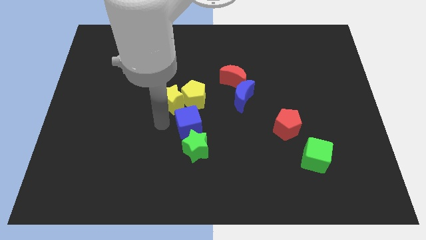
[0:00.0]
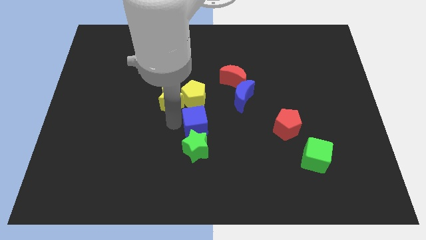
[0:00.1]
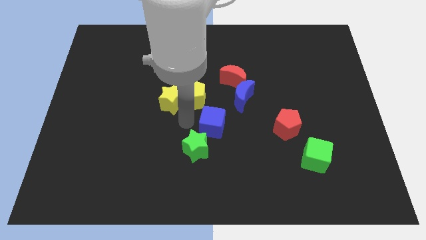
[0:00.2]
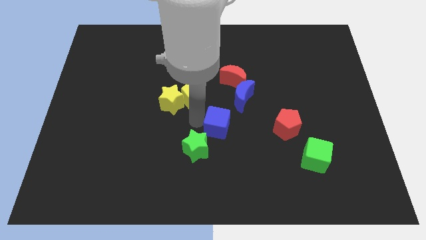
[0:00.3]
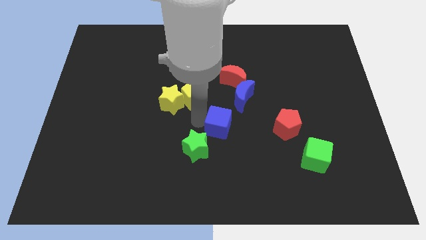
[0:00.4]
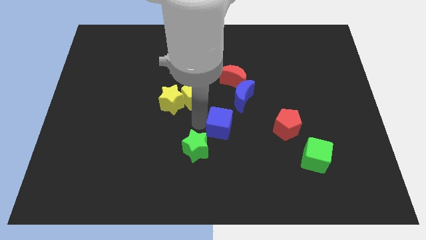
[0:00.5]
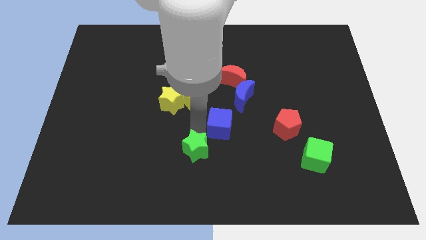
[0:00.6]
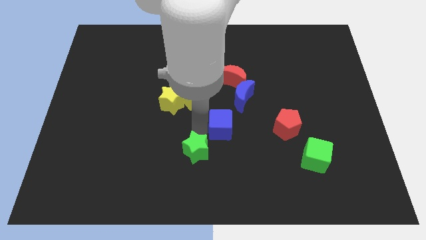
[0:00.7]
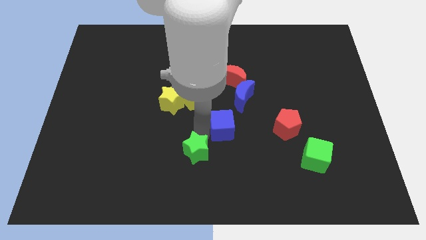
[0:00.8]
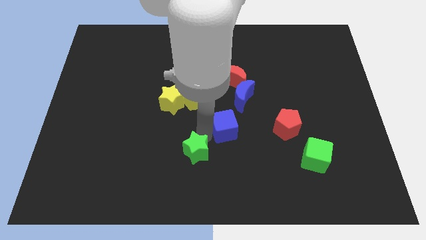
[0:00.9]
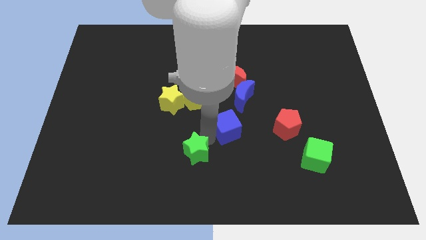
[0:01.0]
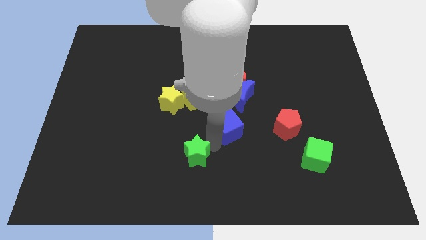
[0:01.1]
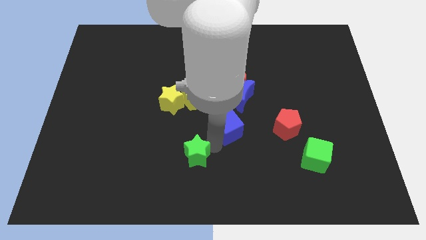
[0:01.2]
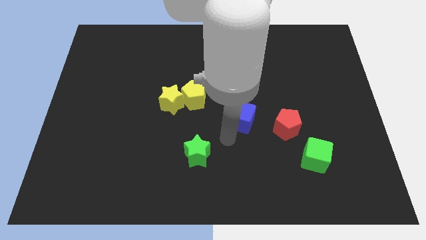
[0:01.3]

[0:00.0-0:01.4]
separate the blue cube from the green star

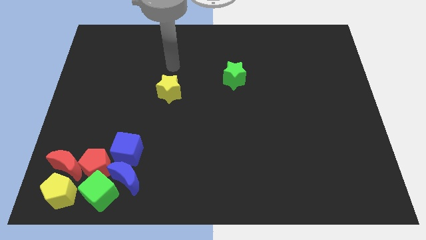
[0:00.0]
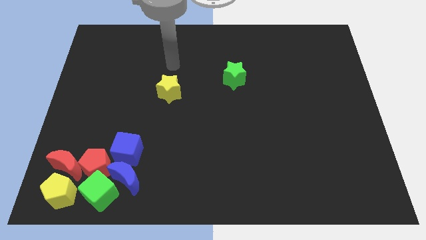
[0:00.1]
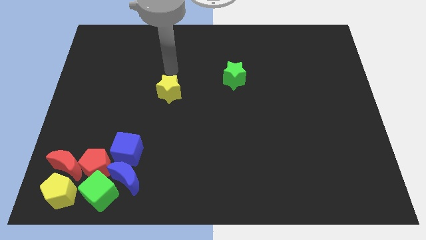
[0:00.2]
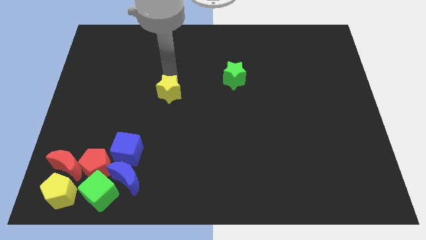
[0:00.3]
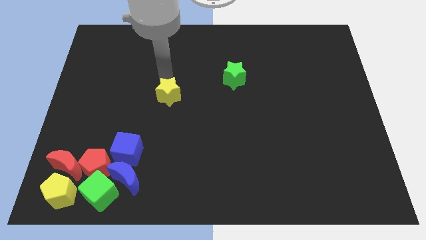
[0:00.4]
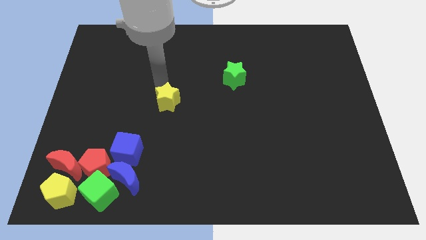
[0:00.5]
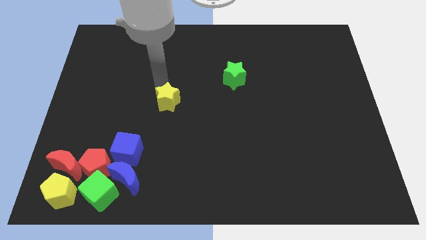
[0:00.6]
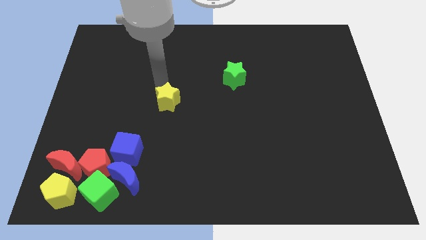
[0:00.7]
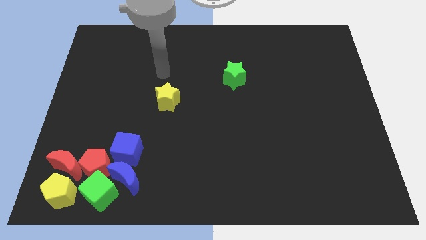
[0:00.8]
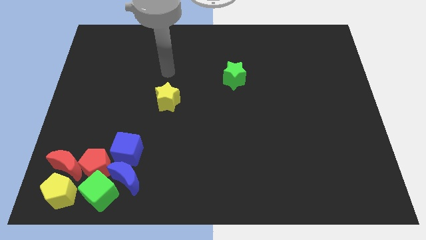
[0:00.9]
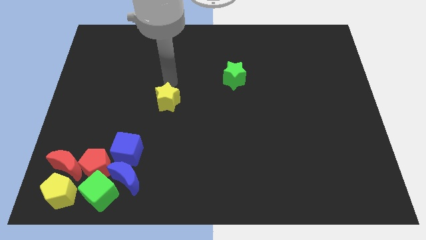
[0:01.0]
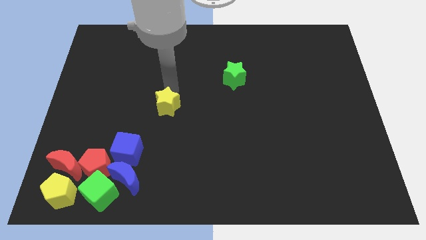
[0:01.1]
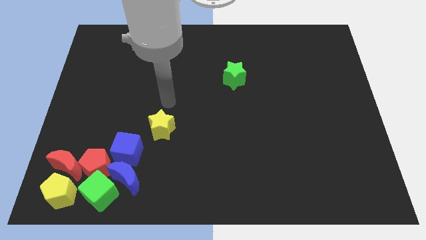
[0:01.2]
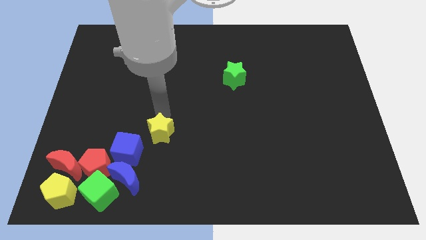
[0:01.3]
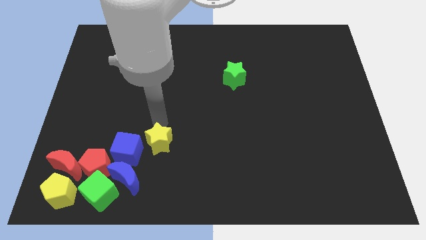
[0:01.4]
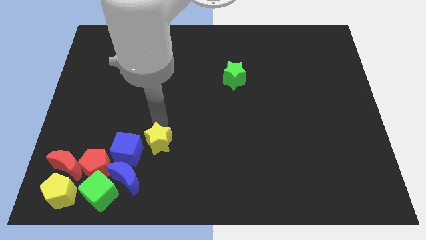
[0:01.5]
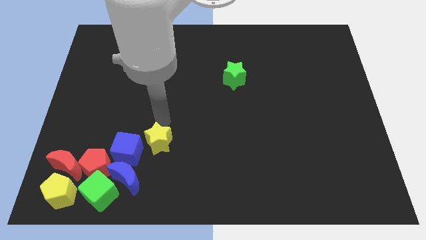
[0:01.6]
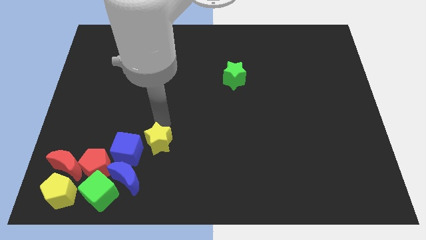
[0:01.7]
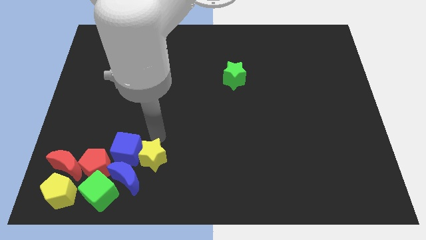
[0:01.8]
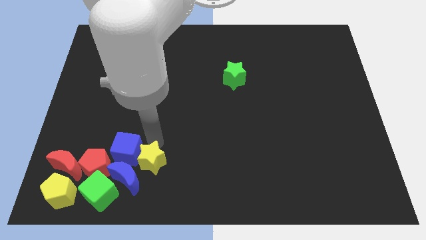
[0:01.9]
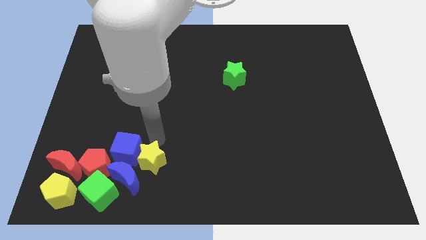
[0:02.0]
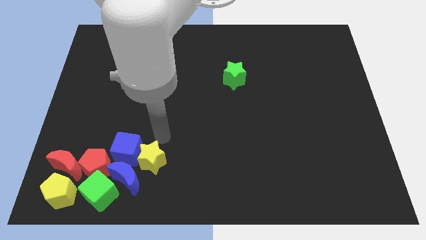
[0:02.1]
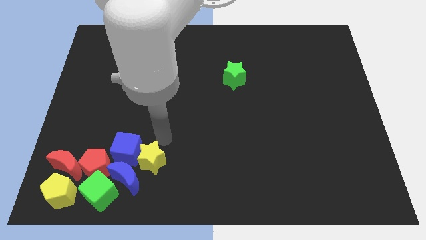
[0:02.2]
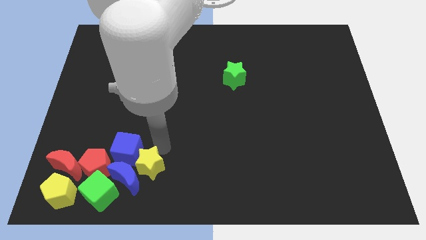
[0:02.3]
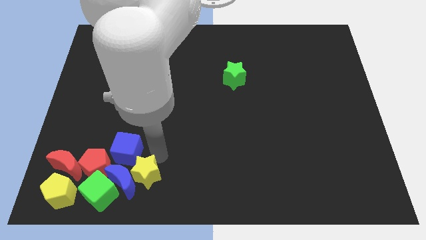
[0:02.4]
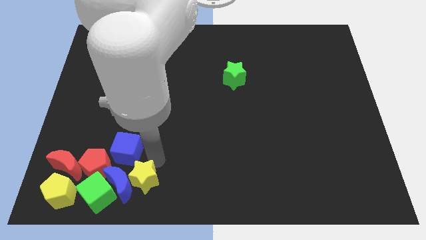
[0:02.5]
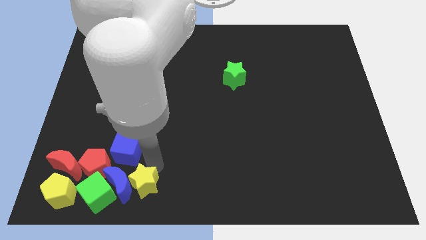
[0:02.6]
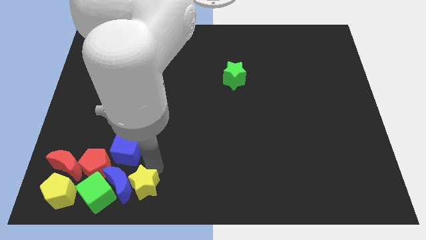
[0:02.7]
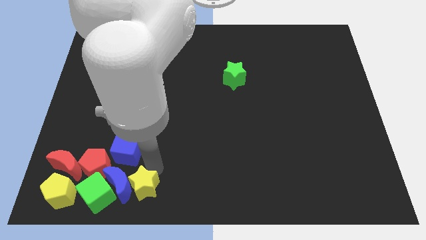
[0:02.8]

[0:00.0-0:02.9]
move the yellow star right to the blue crescent

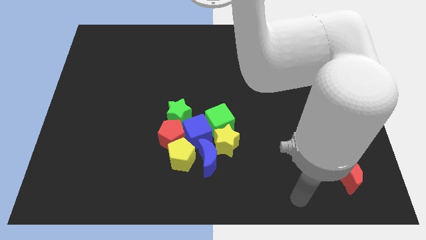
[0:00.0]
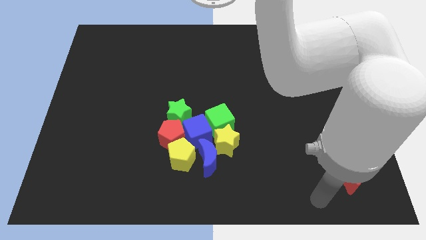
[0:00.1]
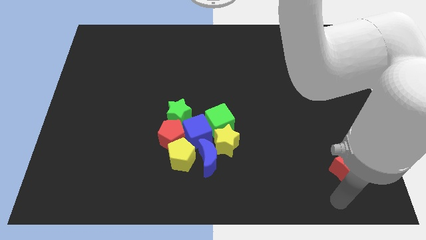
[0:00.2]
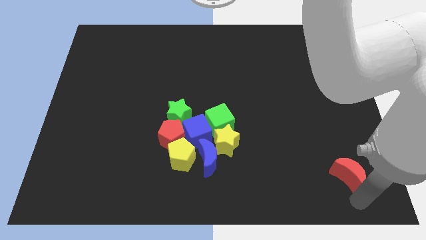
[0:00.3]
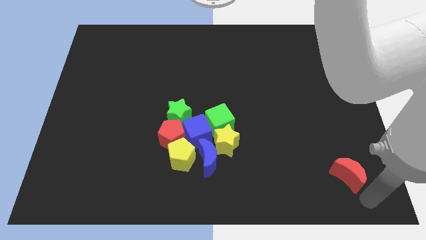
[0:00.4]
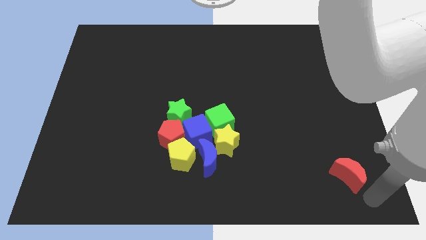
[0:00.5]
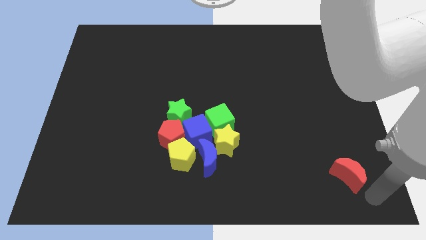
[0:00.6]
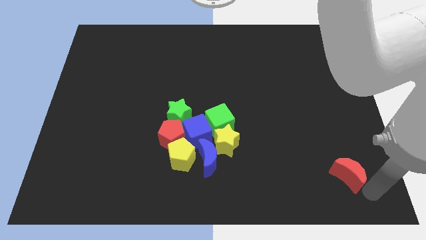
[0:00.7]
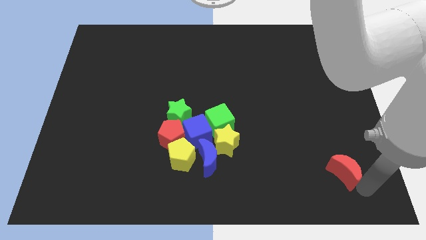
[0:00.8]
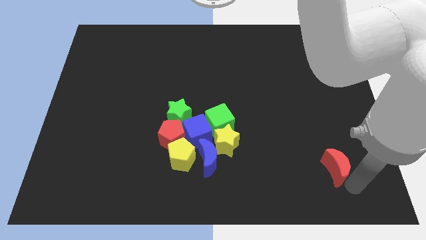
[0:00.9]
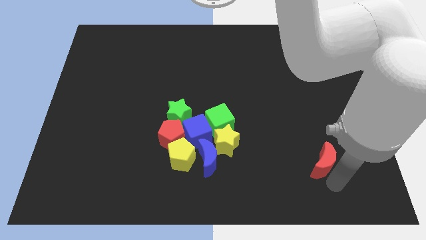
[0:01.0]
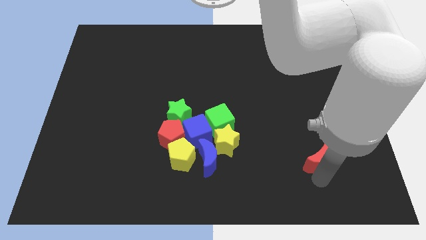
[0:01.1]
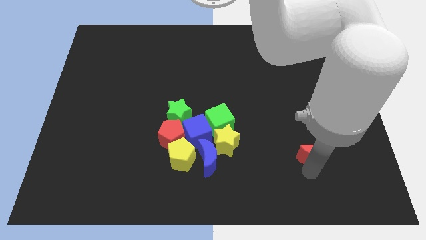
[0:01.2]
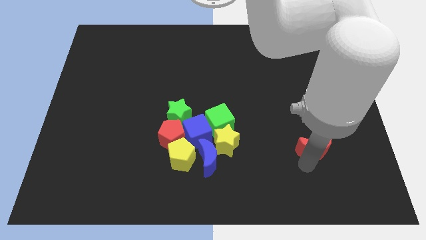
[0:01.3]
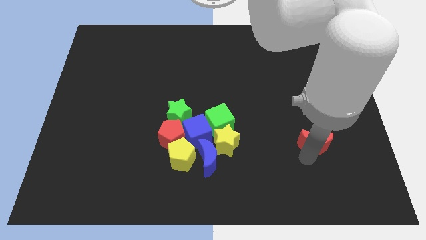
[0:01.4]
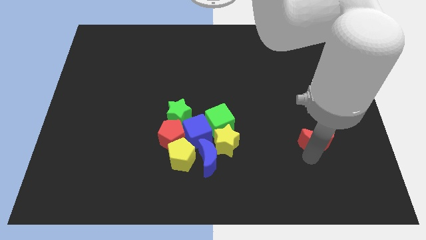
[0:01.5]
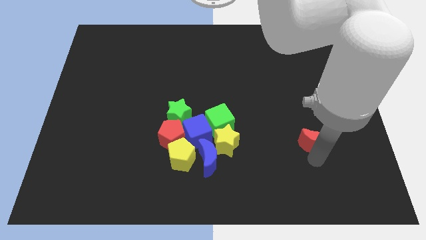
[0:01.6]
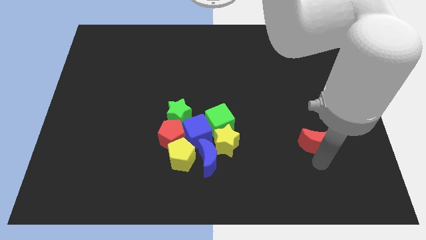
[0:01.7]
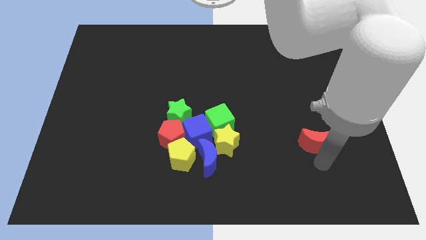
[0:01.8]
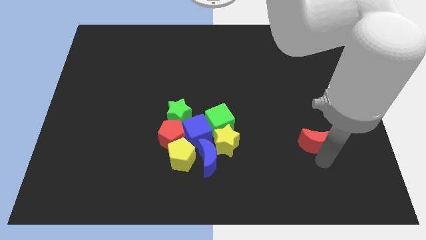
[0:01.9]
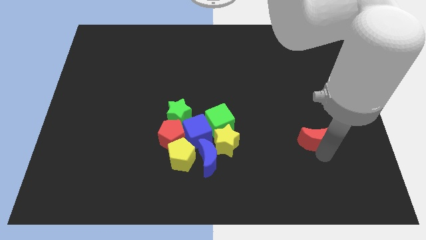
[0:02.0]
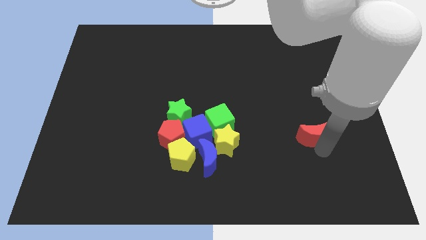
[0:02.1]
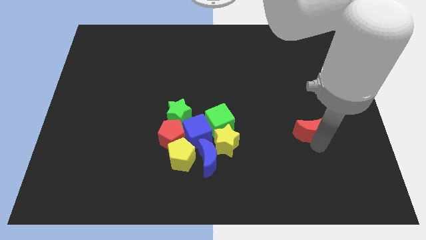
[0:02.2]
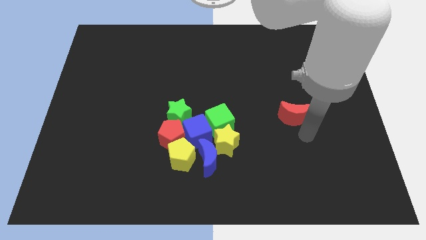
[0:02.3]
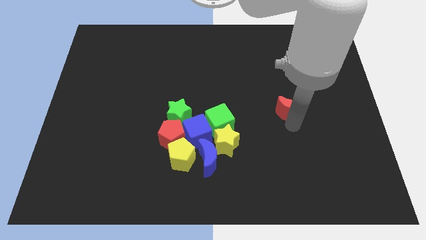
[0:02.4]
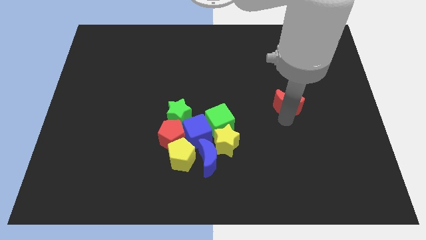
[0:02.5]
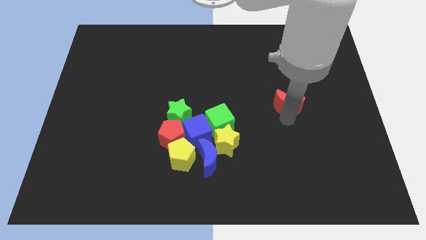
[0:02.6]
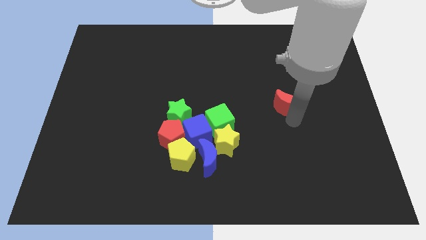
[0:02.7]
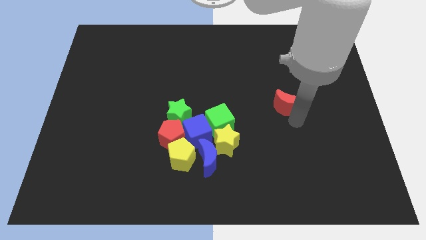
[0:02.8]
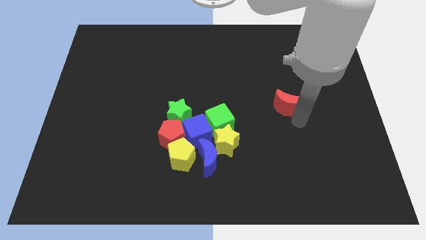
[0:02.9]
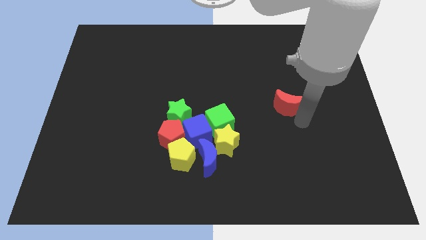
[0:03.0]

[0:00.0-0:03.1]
push the red moon towards up

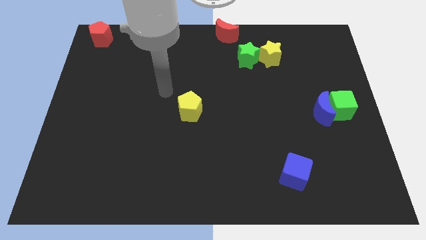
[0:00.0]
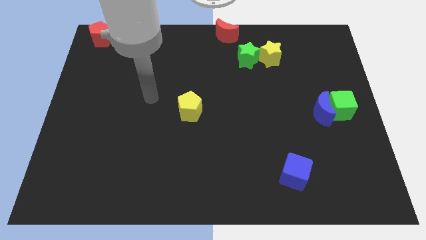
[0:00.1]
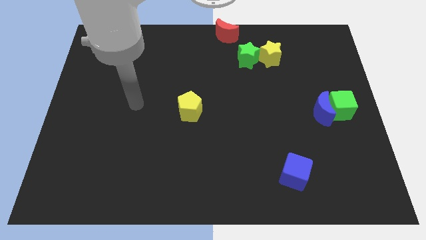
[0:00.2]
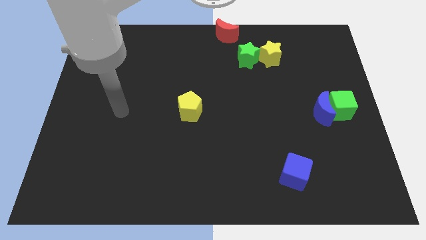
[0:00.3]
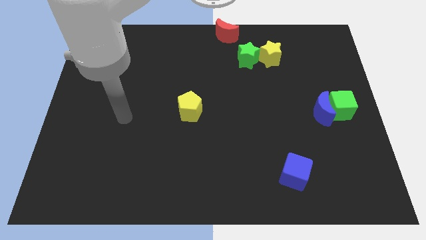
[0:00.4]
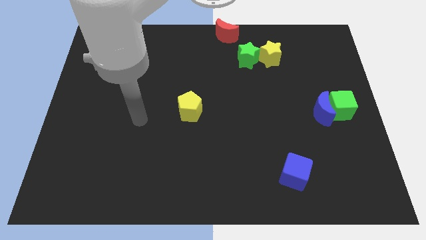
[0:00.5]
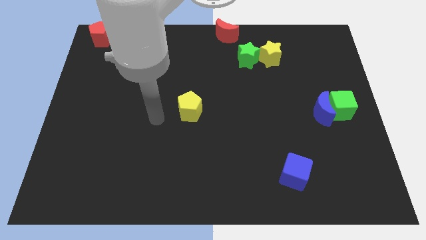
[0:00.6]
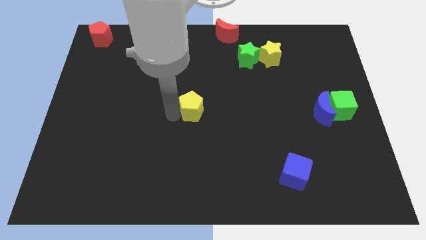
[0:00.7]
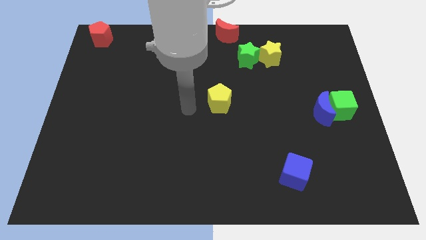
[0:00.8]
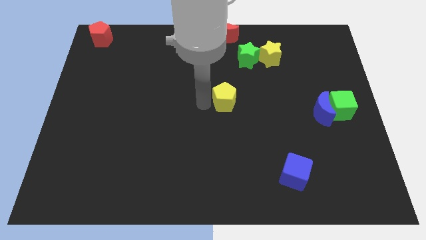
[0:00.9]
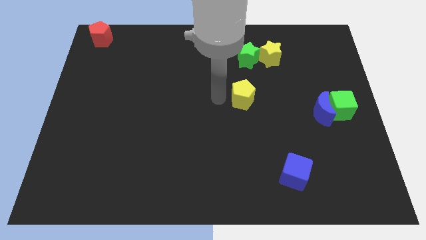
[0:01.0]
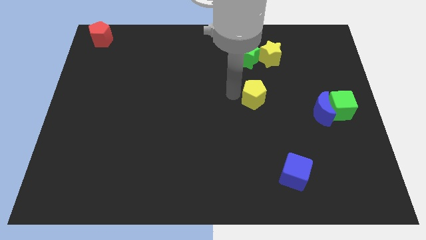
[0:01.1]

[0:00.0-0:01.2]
move the yellow pentagon down to the green star

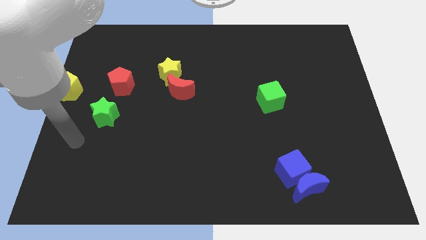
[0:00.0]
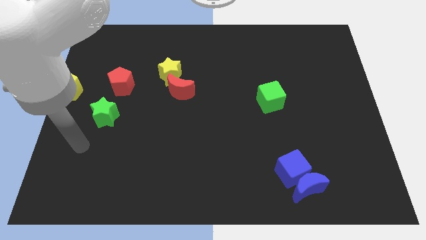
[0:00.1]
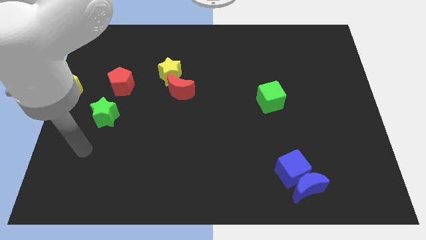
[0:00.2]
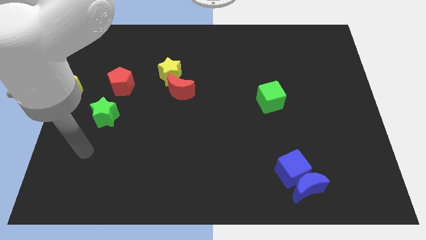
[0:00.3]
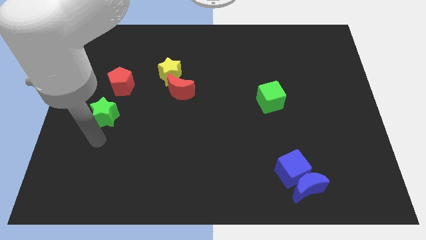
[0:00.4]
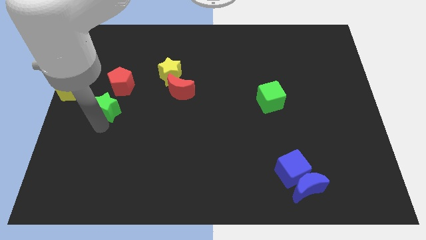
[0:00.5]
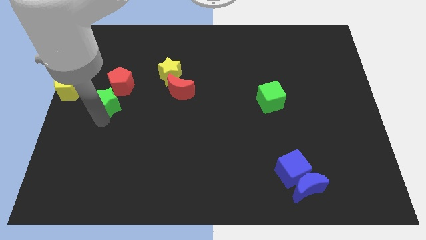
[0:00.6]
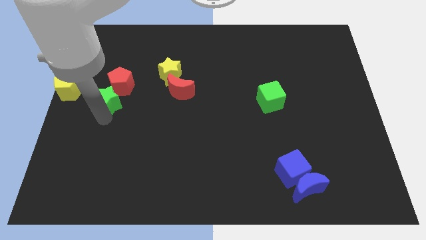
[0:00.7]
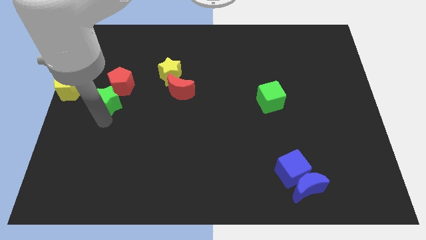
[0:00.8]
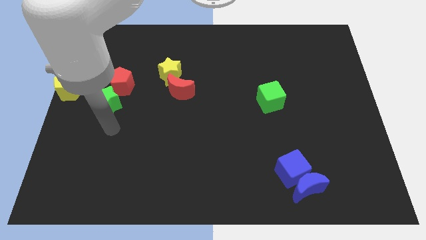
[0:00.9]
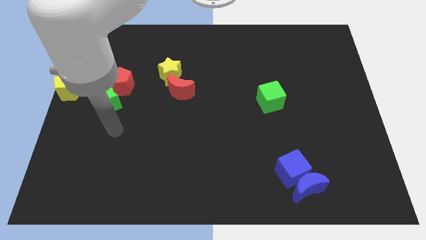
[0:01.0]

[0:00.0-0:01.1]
move the green green close to the red pentagon
